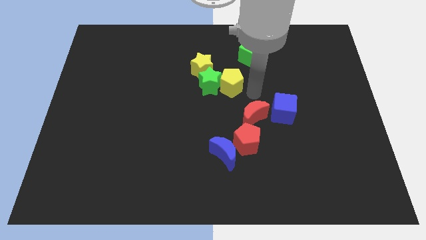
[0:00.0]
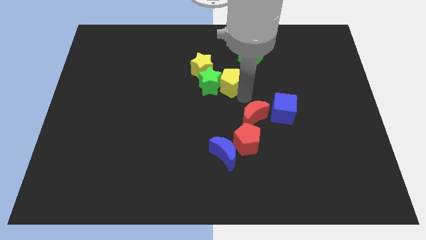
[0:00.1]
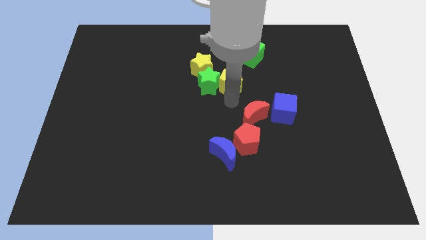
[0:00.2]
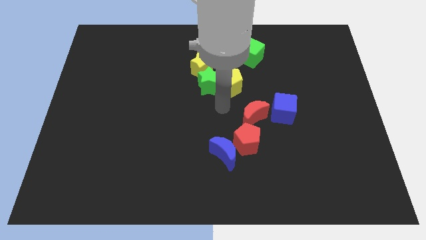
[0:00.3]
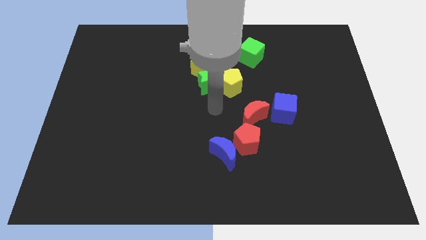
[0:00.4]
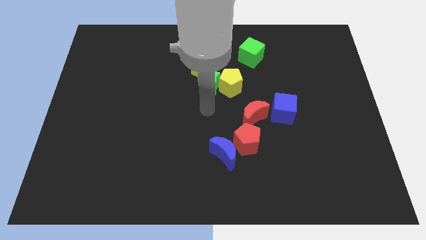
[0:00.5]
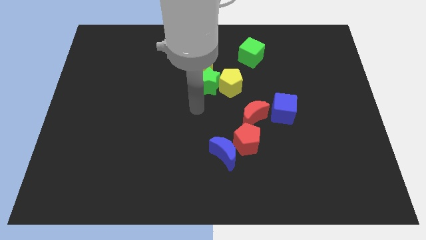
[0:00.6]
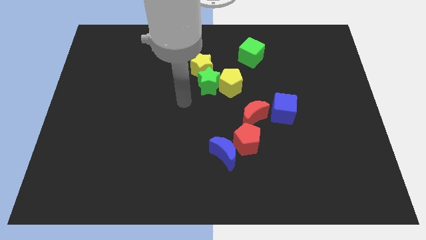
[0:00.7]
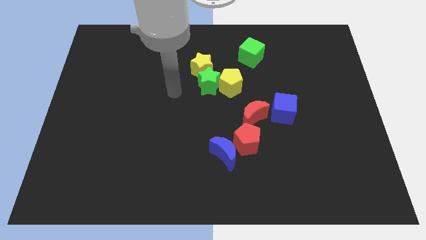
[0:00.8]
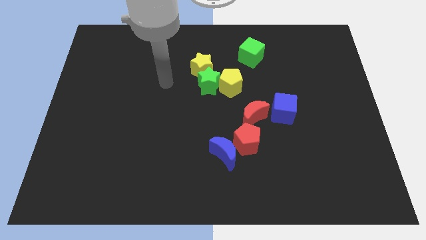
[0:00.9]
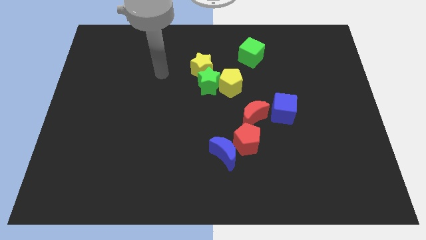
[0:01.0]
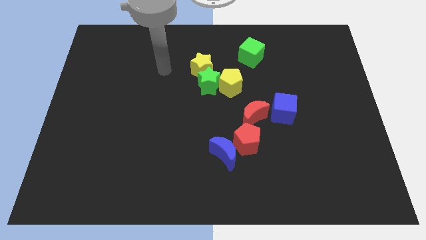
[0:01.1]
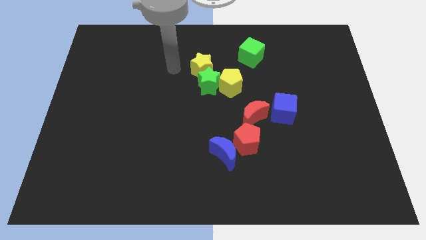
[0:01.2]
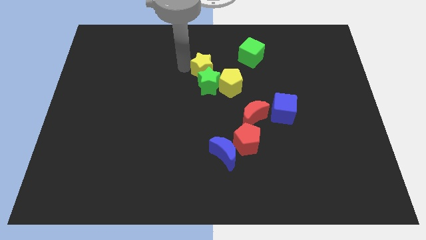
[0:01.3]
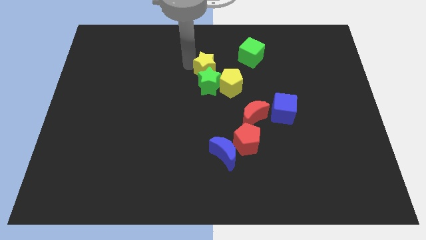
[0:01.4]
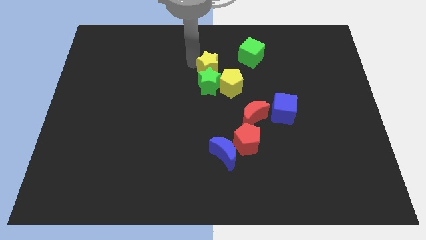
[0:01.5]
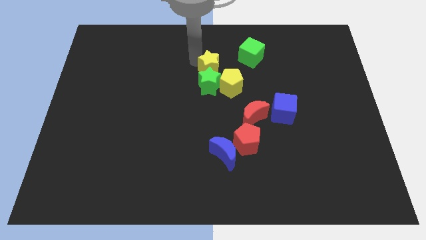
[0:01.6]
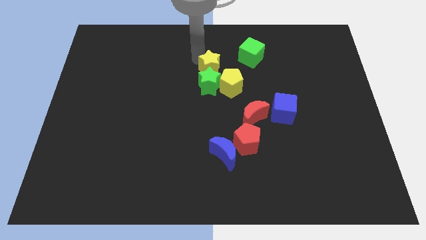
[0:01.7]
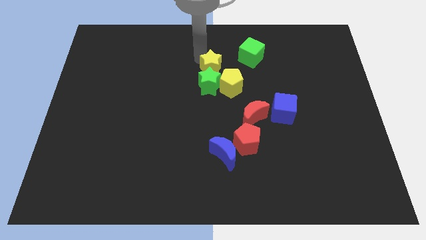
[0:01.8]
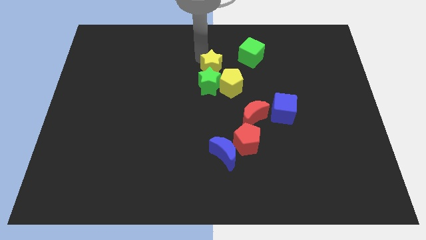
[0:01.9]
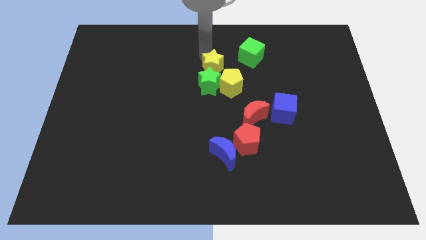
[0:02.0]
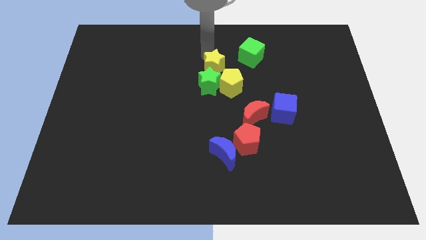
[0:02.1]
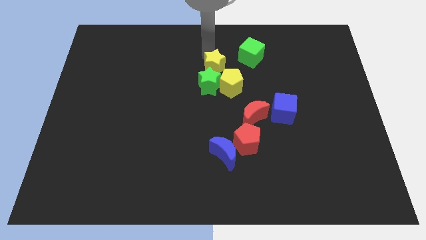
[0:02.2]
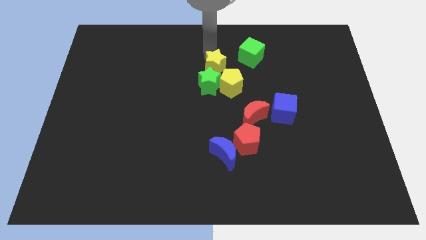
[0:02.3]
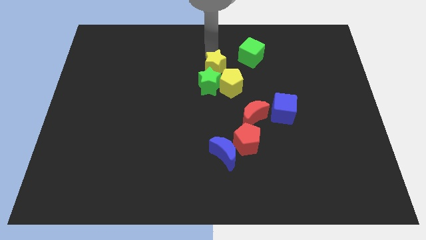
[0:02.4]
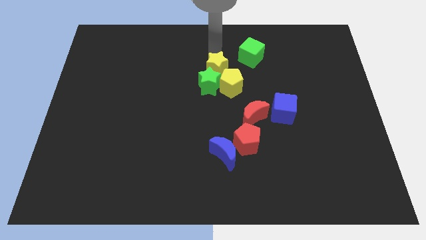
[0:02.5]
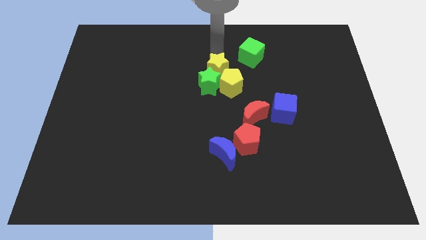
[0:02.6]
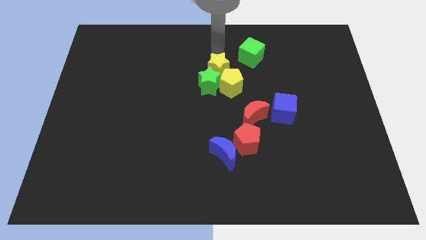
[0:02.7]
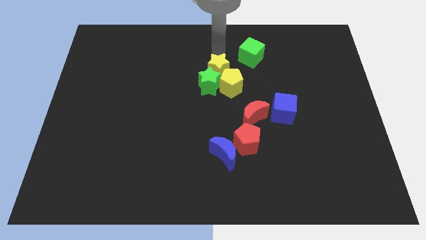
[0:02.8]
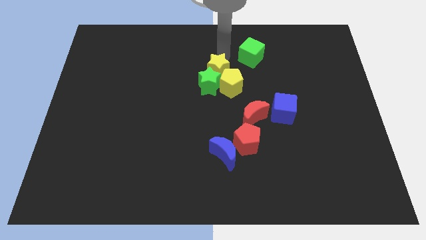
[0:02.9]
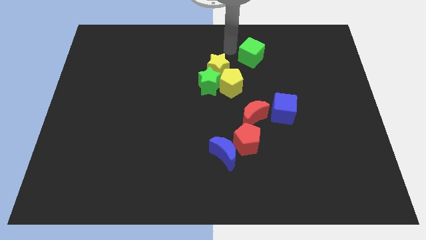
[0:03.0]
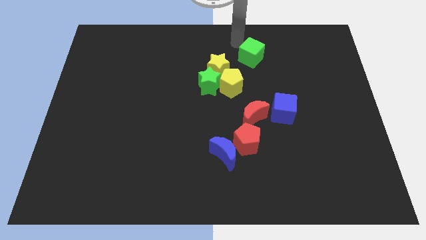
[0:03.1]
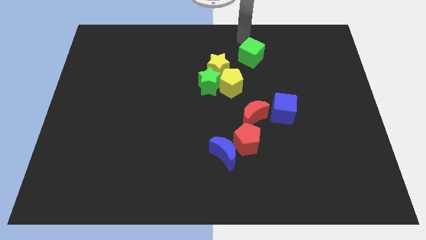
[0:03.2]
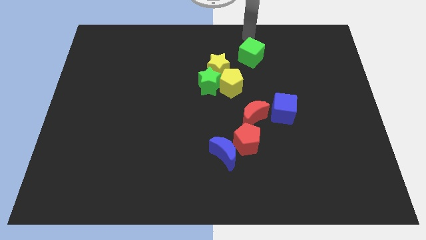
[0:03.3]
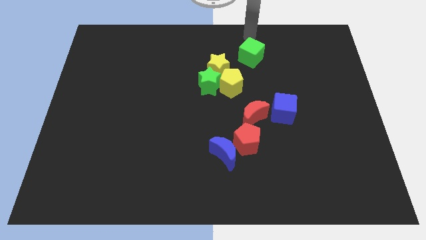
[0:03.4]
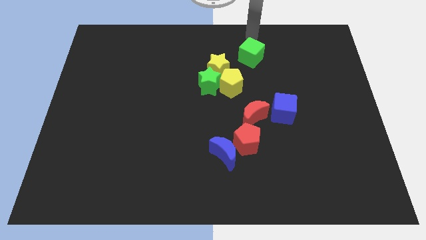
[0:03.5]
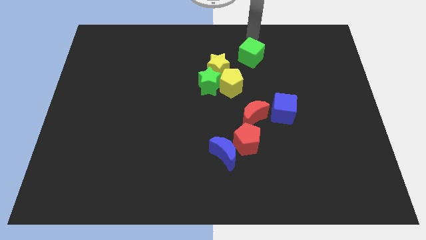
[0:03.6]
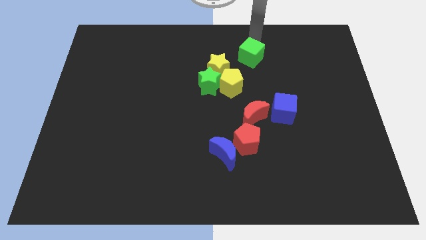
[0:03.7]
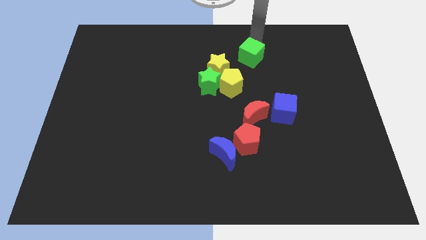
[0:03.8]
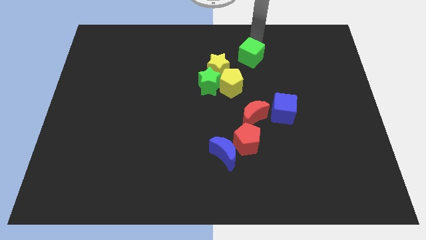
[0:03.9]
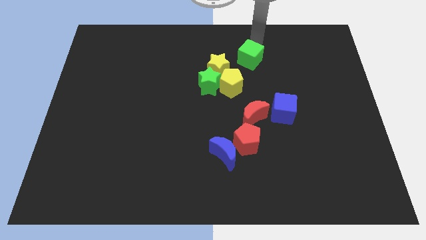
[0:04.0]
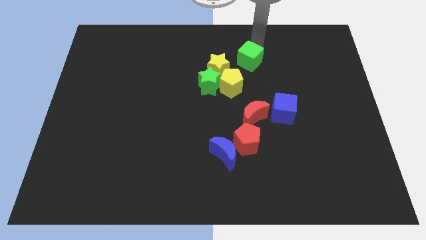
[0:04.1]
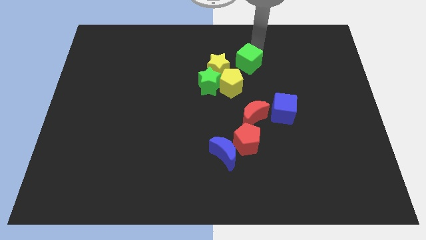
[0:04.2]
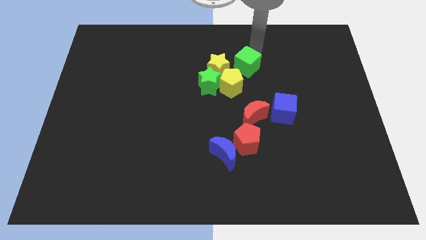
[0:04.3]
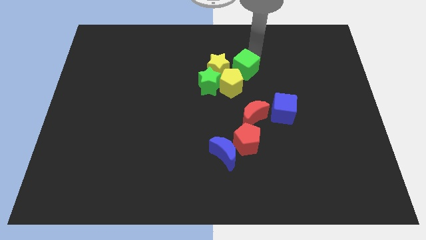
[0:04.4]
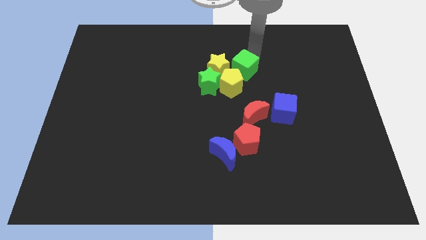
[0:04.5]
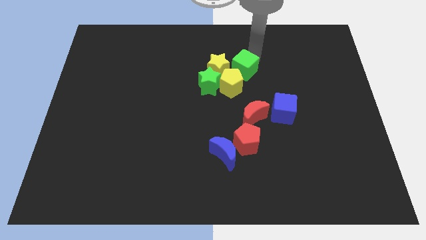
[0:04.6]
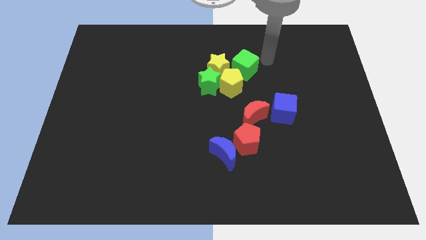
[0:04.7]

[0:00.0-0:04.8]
form a group with yellow and the green blocks at the top center

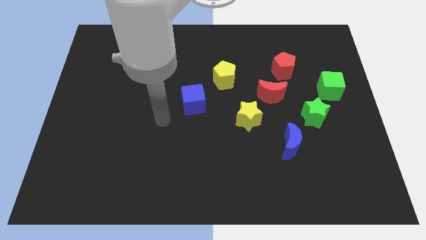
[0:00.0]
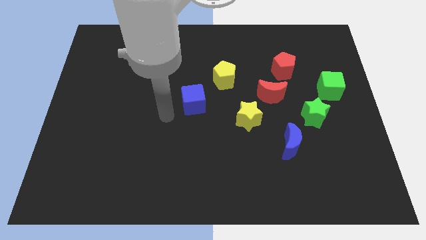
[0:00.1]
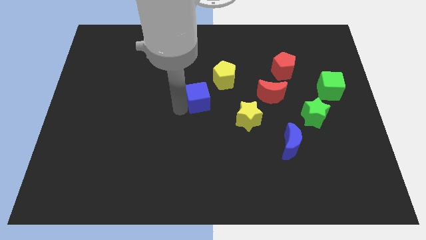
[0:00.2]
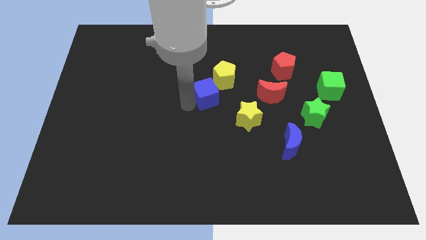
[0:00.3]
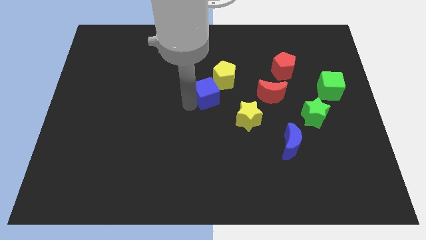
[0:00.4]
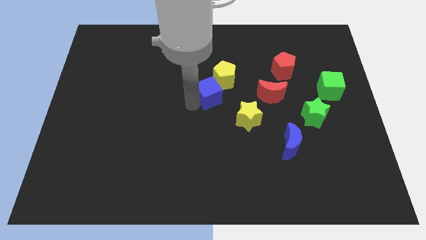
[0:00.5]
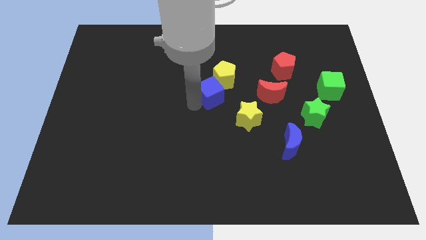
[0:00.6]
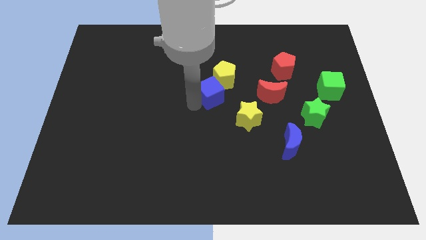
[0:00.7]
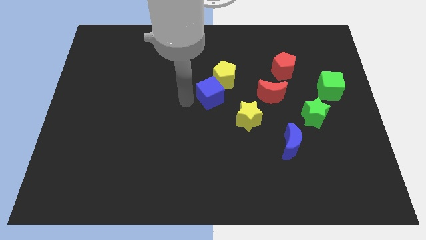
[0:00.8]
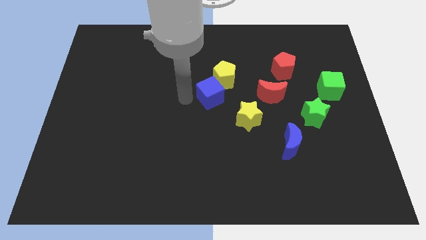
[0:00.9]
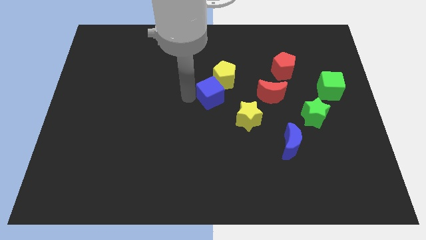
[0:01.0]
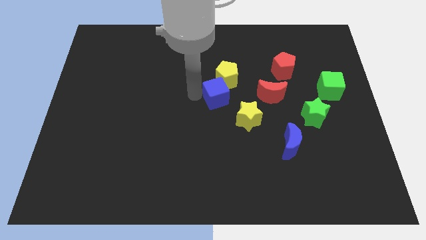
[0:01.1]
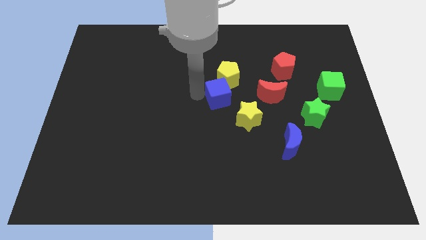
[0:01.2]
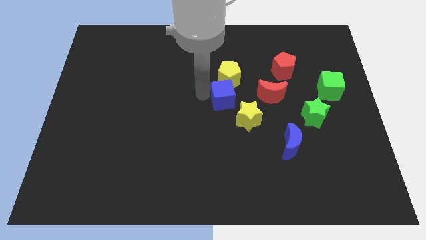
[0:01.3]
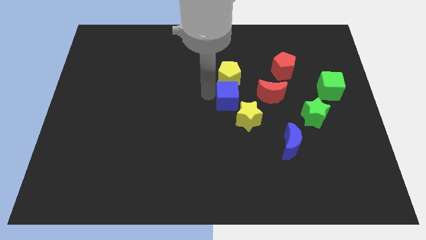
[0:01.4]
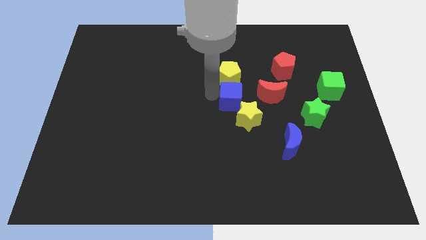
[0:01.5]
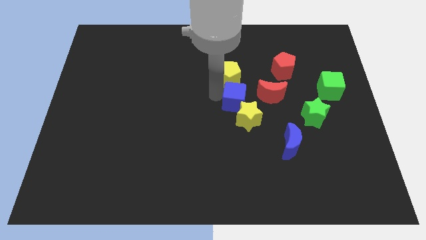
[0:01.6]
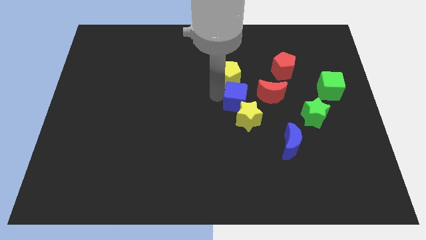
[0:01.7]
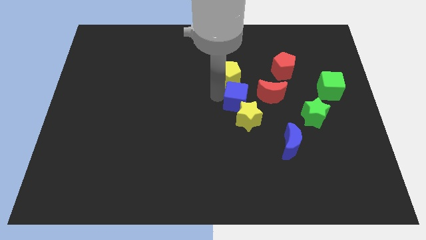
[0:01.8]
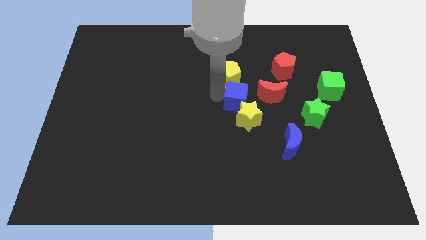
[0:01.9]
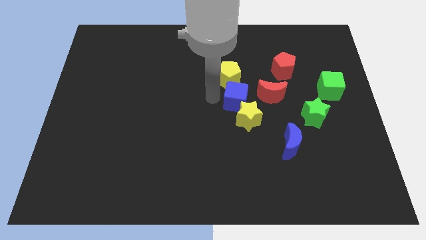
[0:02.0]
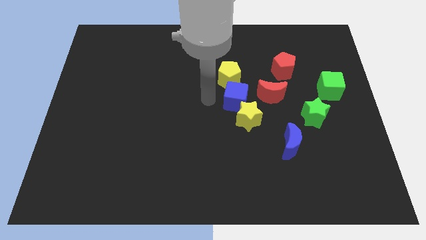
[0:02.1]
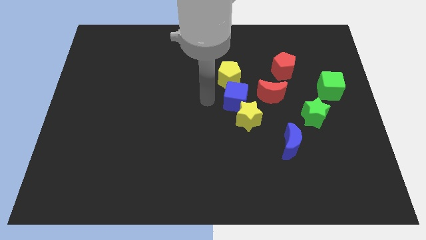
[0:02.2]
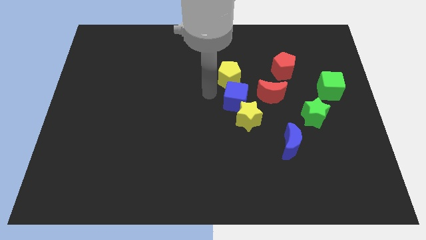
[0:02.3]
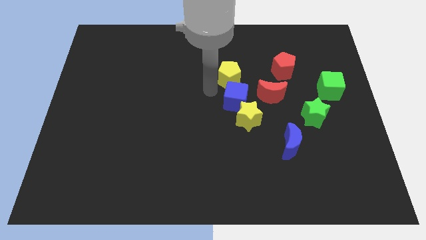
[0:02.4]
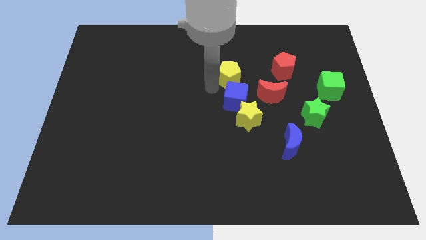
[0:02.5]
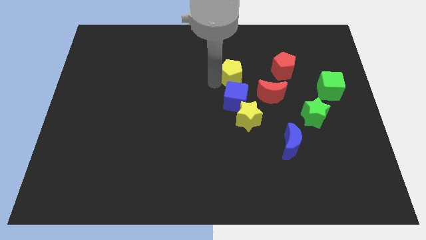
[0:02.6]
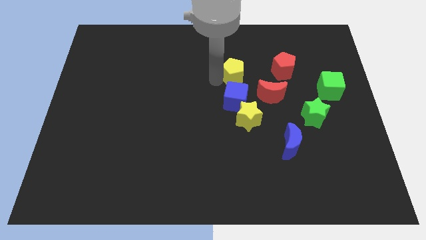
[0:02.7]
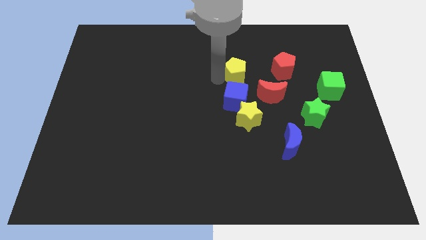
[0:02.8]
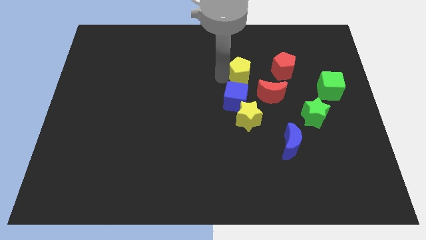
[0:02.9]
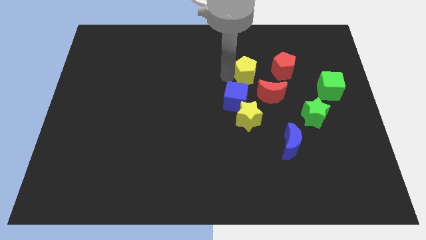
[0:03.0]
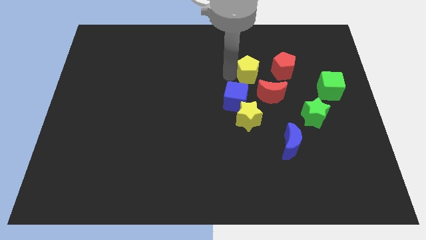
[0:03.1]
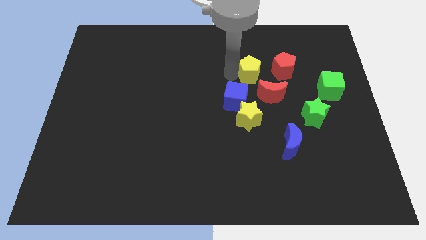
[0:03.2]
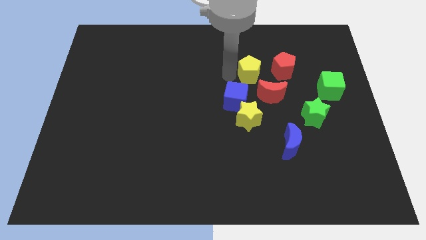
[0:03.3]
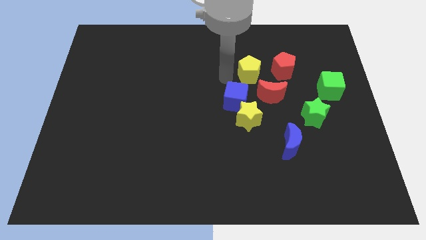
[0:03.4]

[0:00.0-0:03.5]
push the green cube and yellow pentagon slightly to the right side of the board

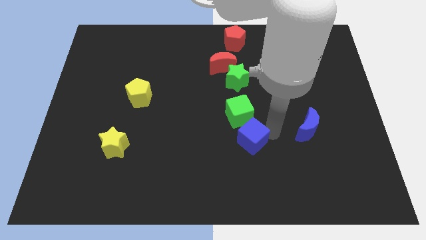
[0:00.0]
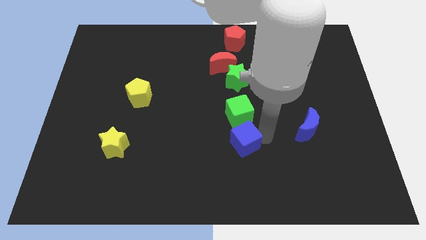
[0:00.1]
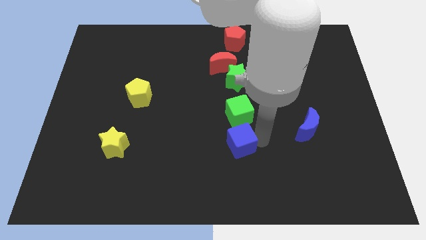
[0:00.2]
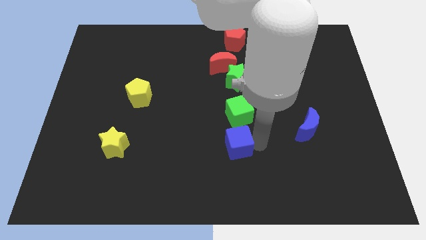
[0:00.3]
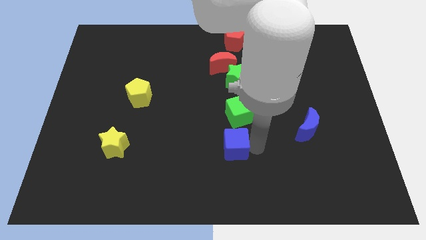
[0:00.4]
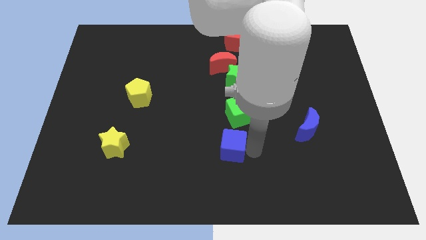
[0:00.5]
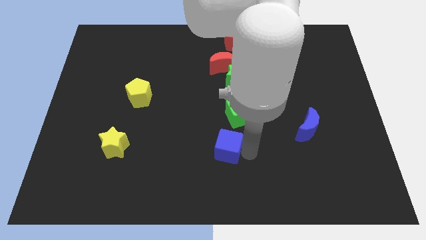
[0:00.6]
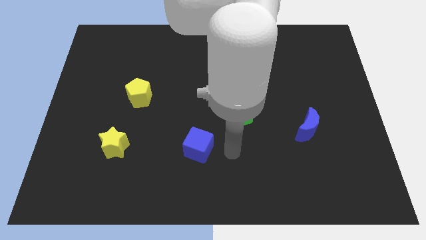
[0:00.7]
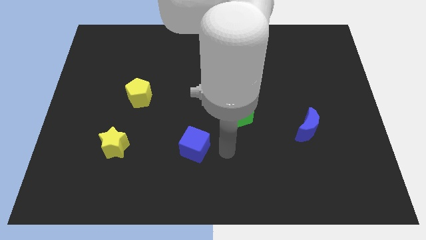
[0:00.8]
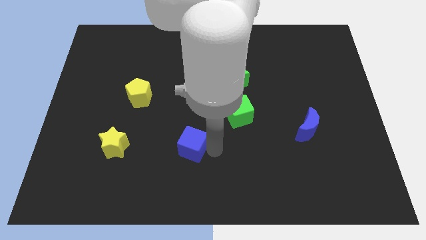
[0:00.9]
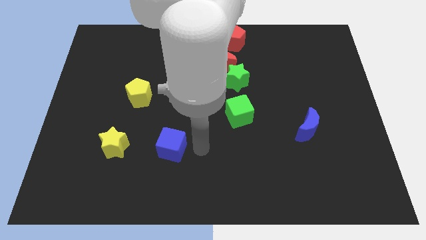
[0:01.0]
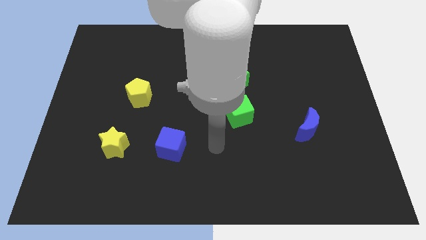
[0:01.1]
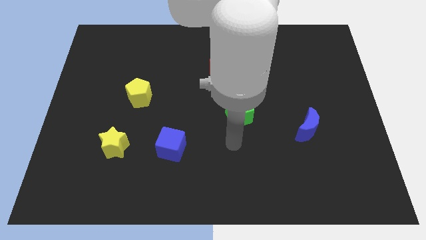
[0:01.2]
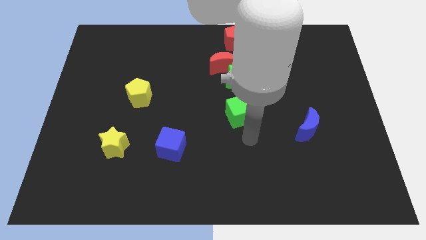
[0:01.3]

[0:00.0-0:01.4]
place the blue block parallel to the yellow star
